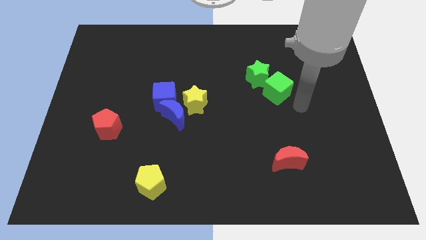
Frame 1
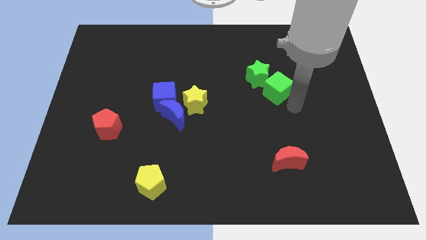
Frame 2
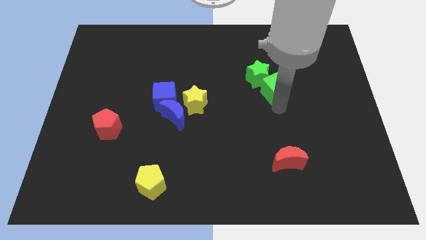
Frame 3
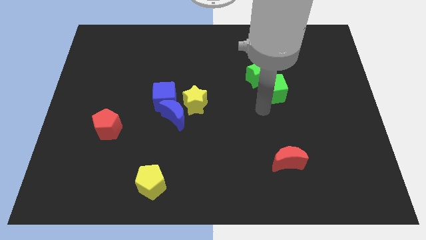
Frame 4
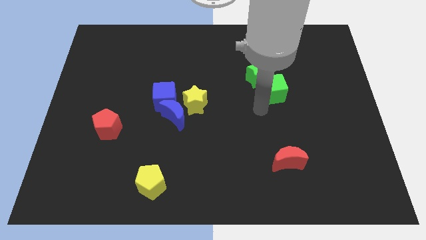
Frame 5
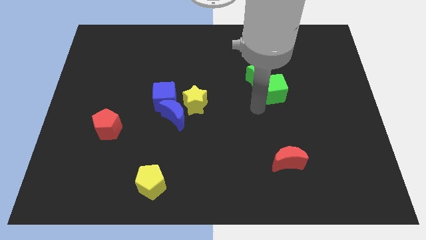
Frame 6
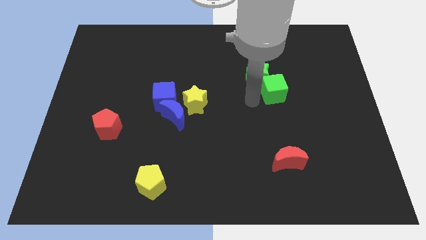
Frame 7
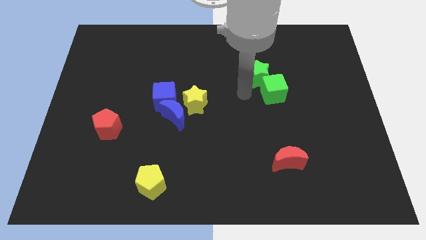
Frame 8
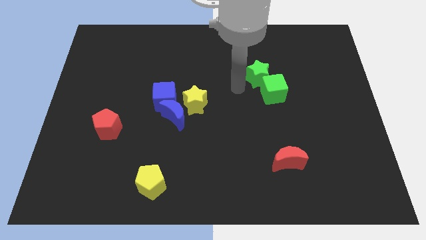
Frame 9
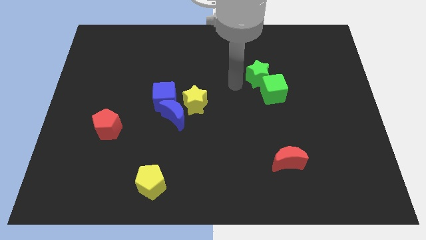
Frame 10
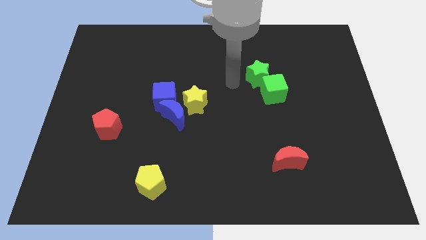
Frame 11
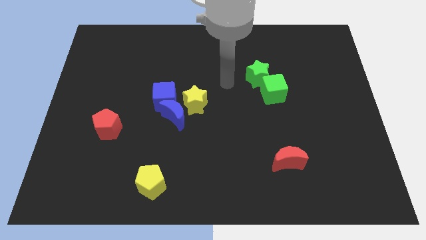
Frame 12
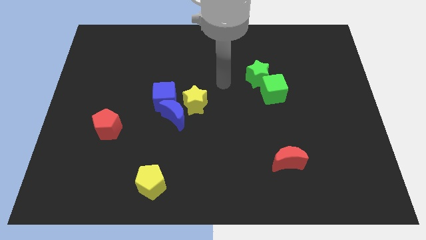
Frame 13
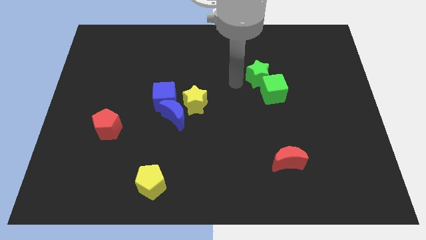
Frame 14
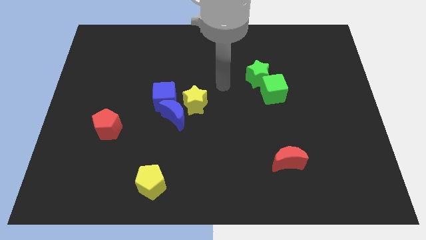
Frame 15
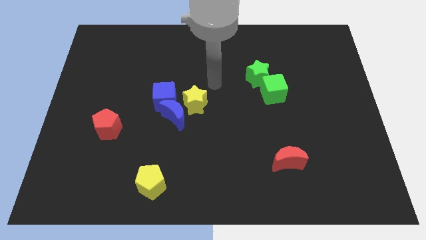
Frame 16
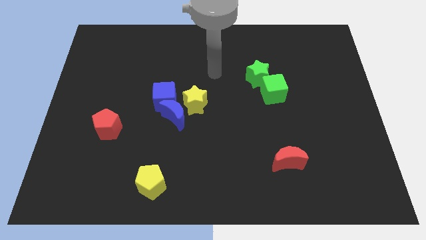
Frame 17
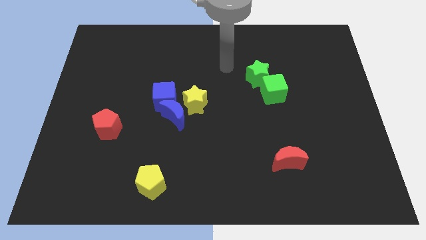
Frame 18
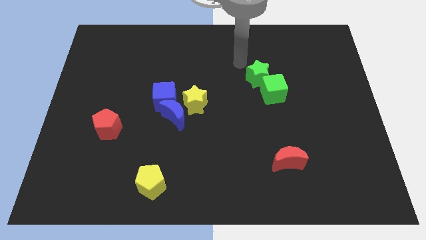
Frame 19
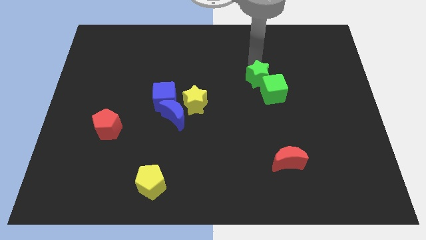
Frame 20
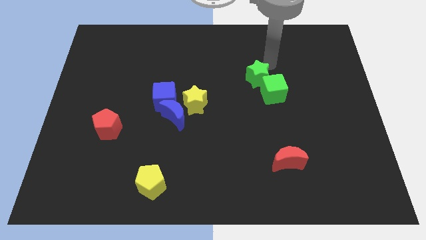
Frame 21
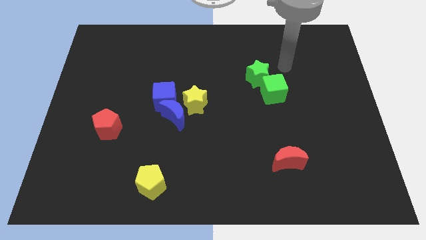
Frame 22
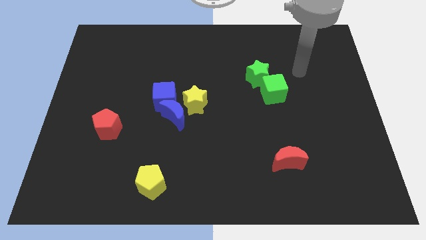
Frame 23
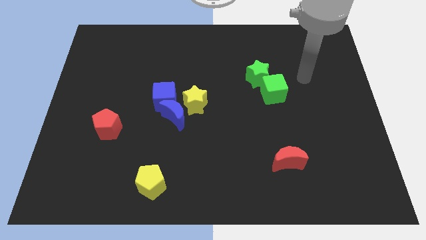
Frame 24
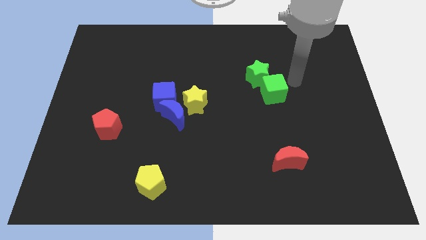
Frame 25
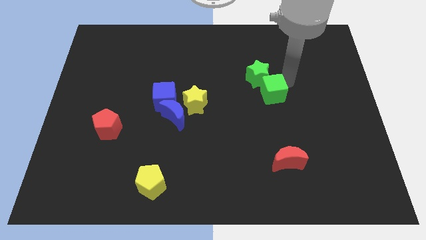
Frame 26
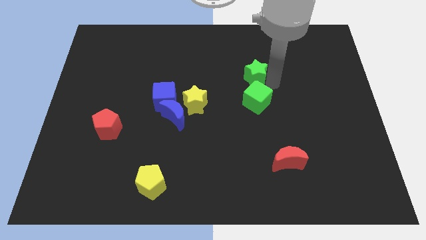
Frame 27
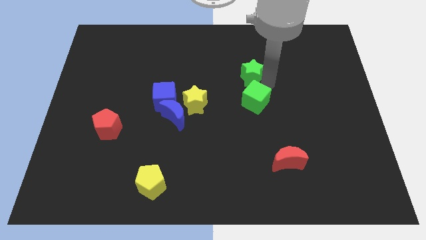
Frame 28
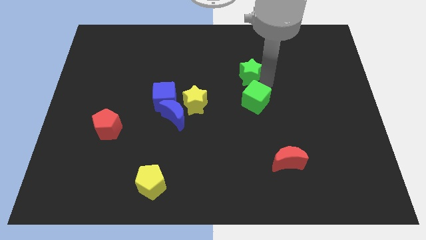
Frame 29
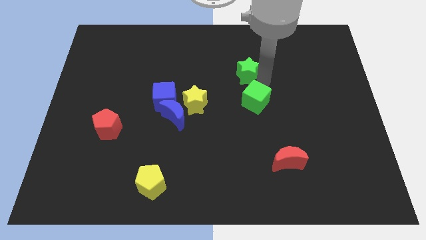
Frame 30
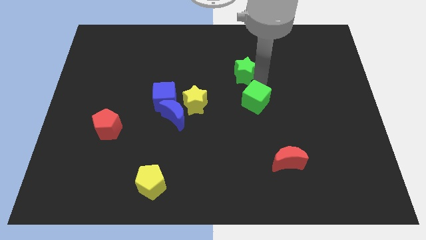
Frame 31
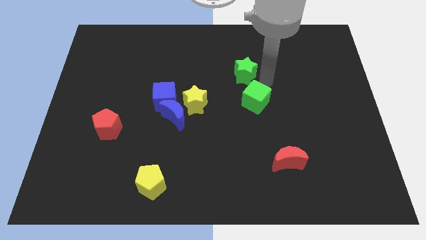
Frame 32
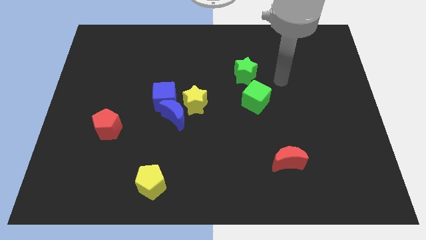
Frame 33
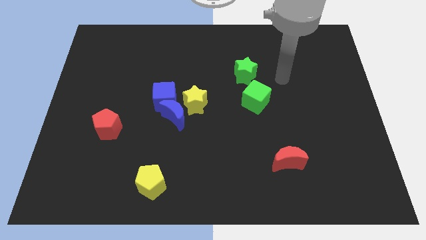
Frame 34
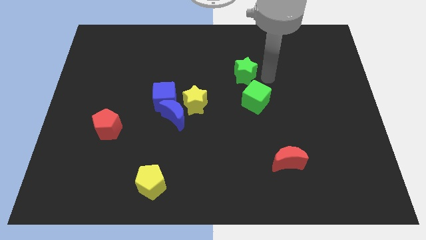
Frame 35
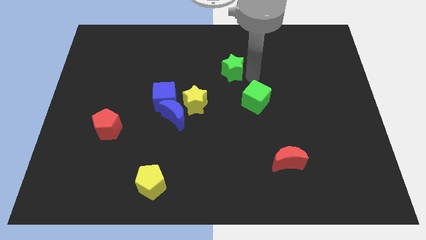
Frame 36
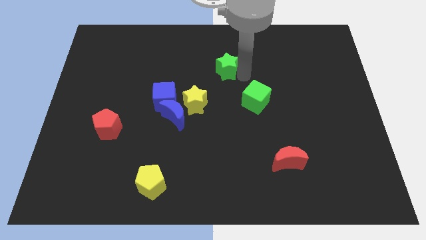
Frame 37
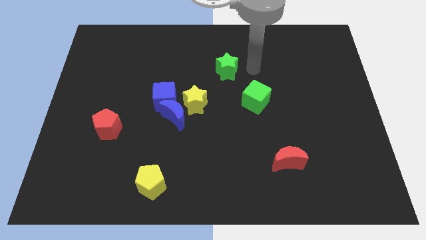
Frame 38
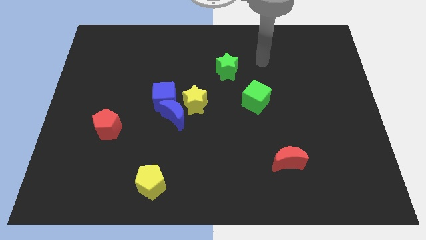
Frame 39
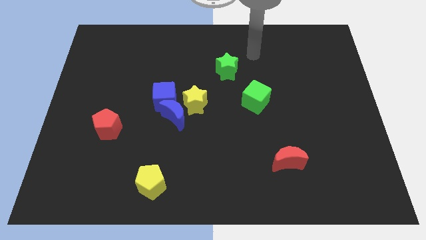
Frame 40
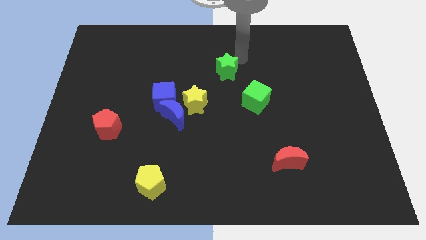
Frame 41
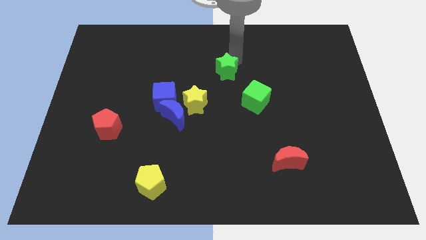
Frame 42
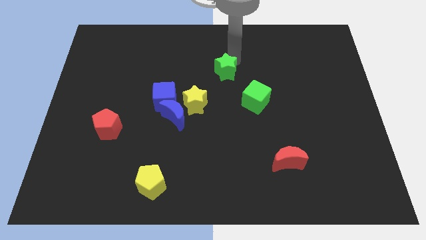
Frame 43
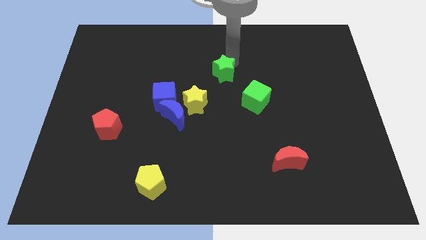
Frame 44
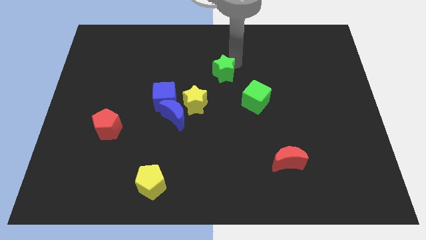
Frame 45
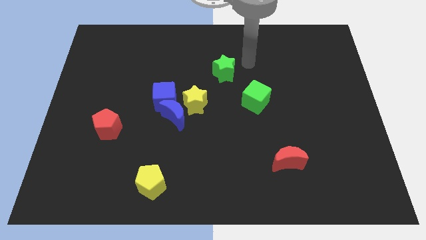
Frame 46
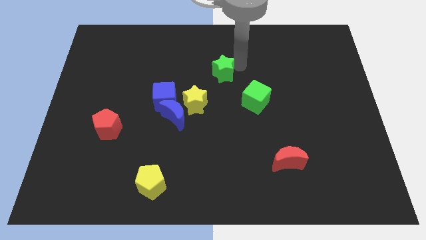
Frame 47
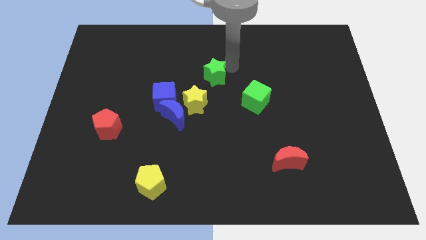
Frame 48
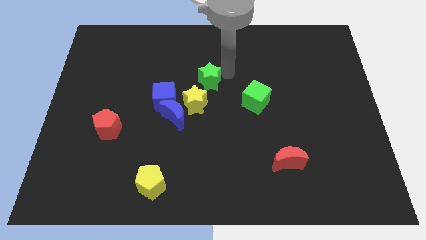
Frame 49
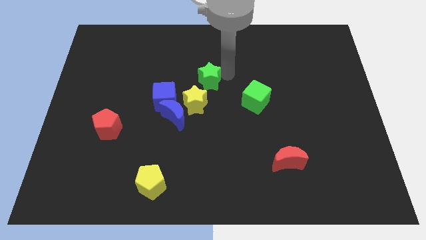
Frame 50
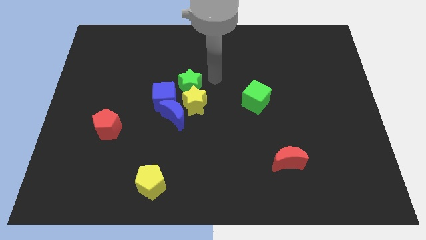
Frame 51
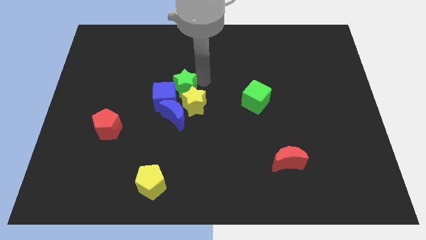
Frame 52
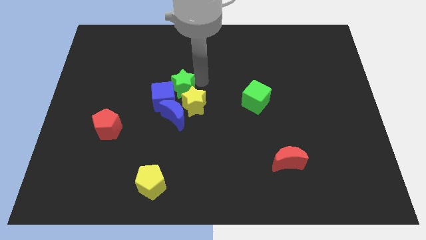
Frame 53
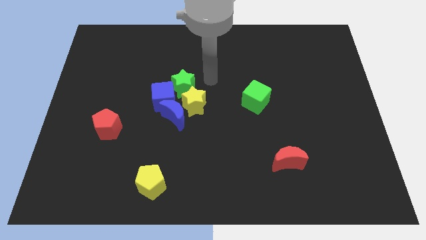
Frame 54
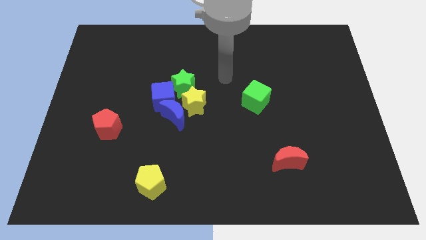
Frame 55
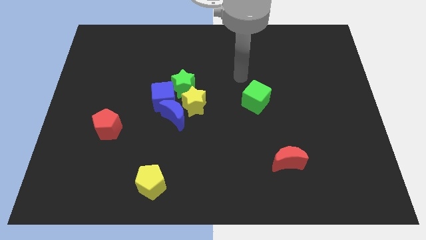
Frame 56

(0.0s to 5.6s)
move the green star above the yellow star

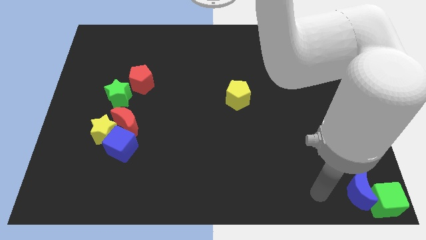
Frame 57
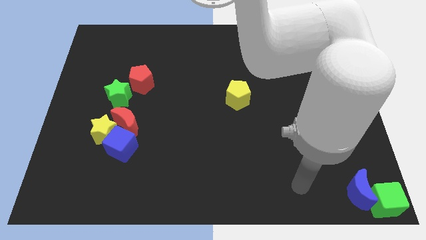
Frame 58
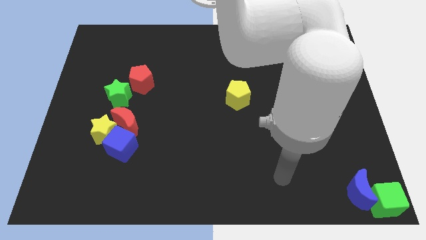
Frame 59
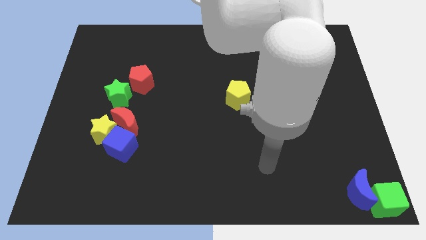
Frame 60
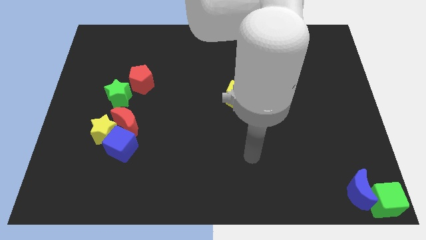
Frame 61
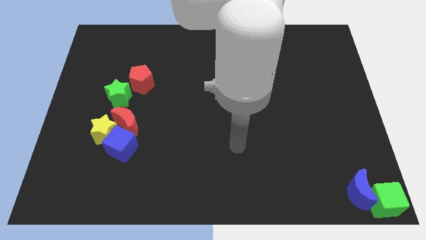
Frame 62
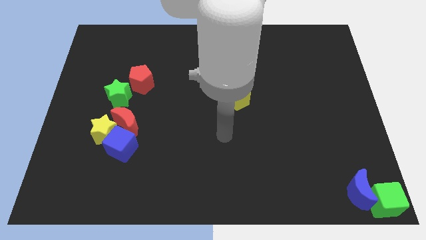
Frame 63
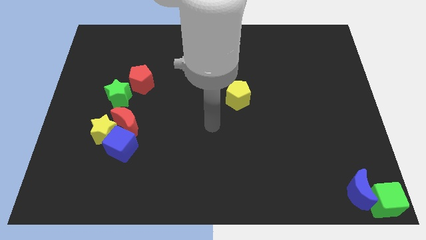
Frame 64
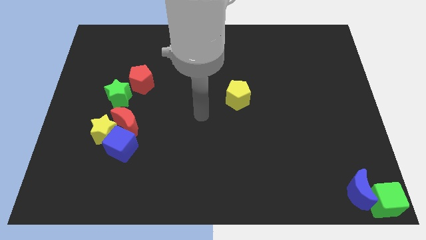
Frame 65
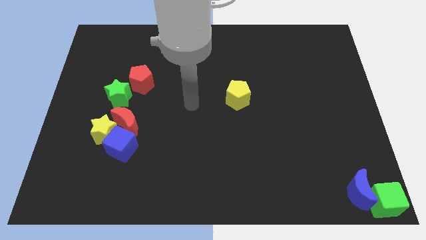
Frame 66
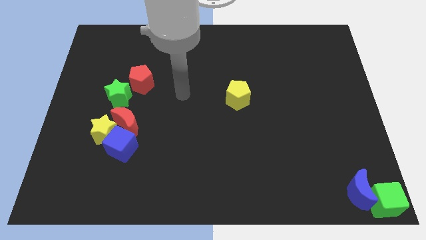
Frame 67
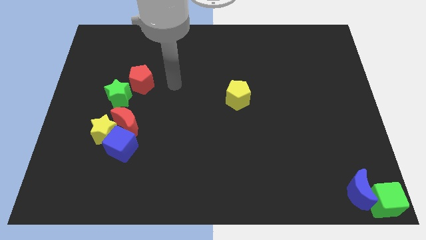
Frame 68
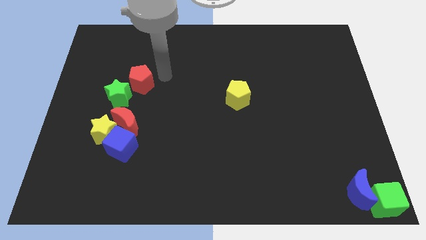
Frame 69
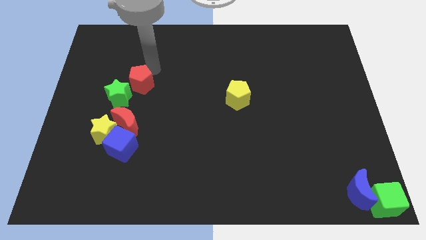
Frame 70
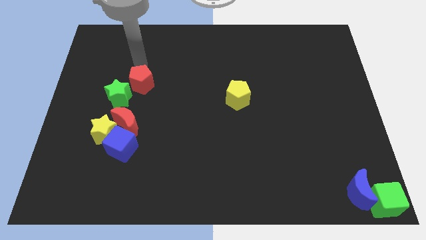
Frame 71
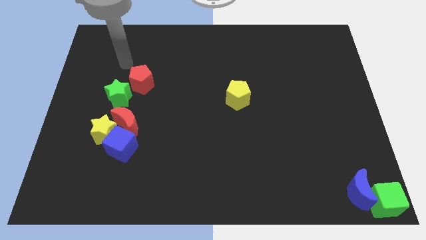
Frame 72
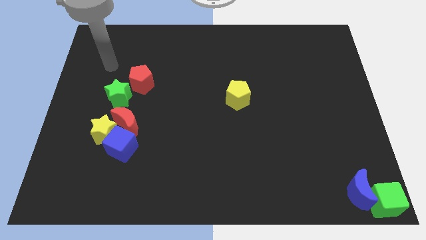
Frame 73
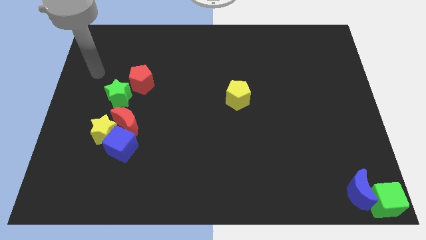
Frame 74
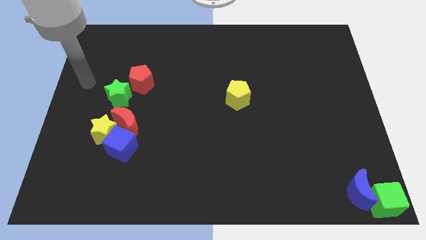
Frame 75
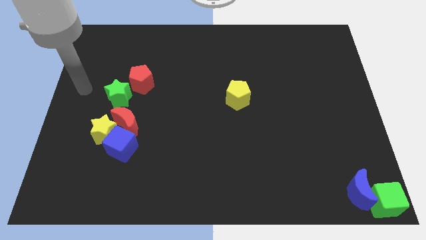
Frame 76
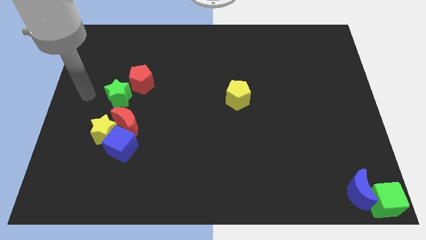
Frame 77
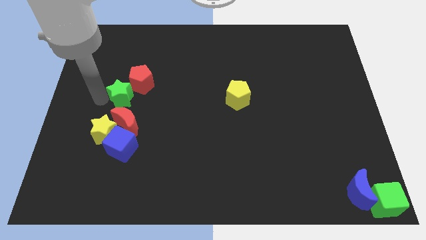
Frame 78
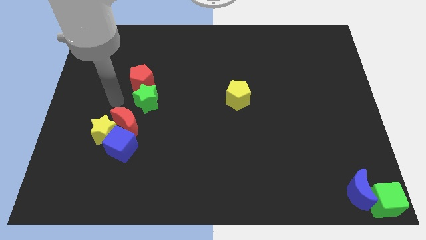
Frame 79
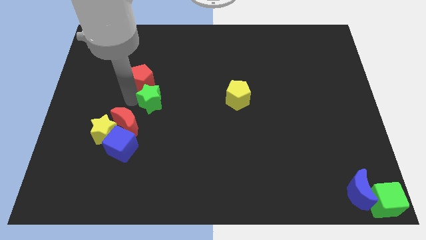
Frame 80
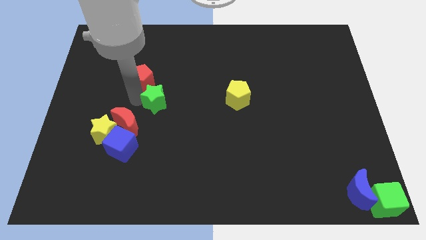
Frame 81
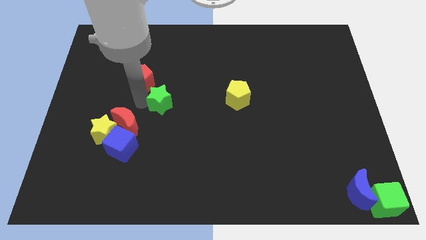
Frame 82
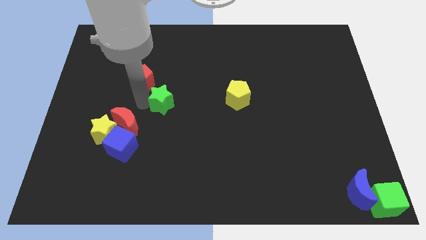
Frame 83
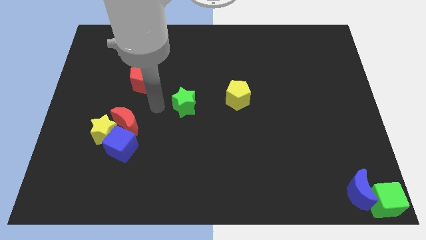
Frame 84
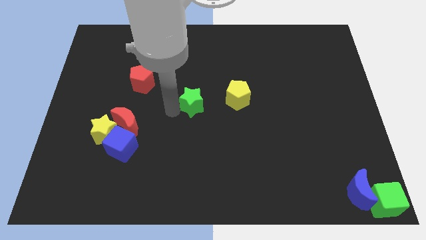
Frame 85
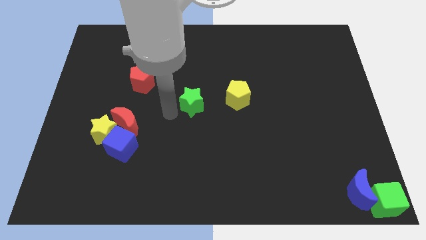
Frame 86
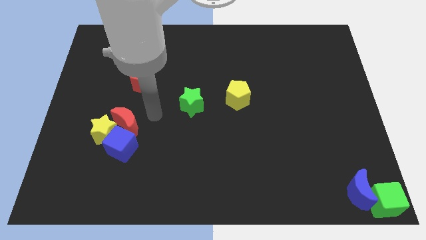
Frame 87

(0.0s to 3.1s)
move the green star to the left of the yellow pentagon

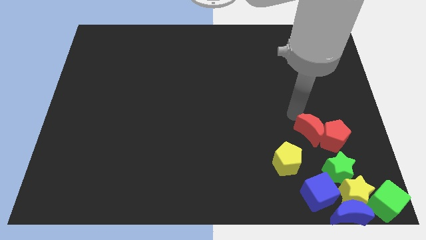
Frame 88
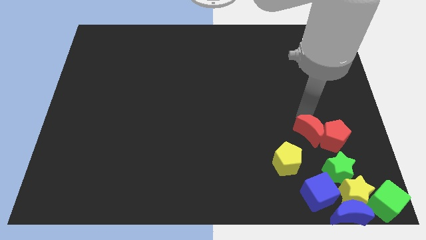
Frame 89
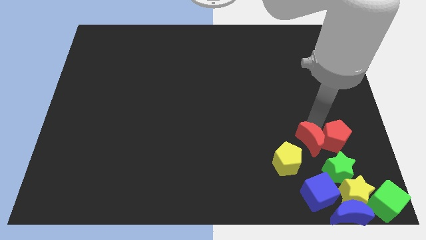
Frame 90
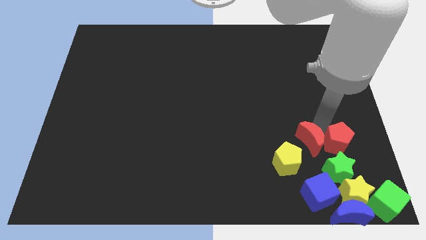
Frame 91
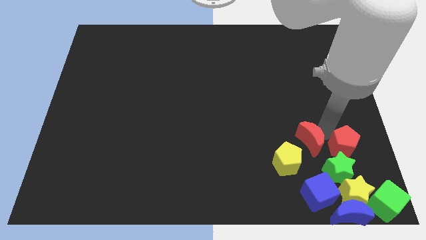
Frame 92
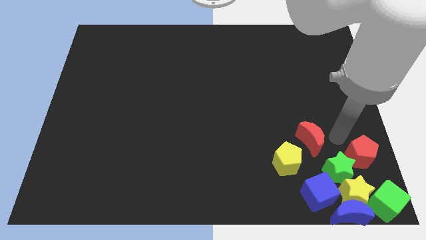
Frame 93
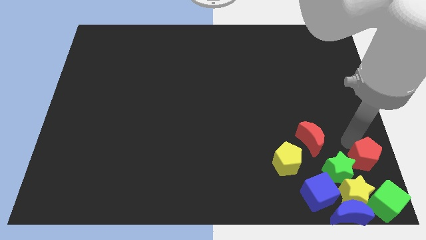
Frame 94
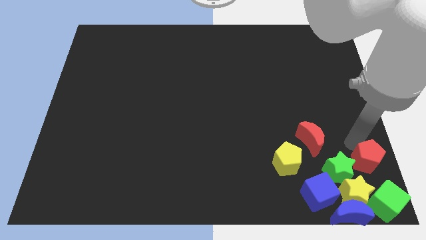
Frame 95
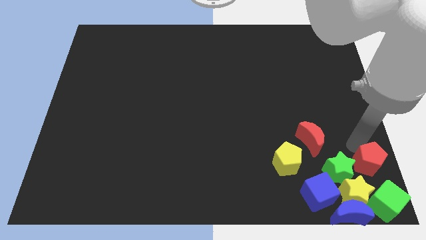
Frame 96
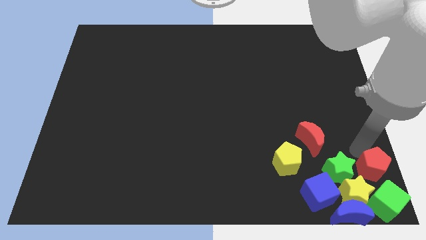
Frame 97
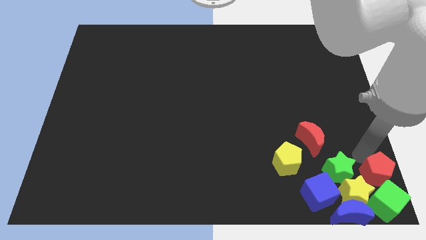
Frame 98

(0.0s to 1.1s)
push red pentagon on top of green cube
